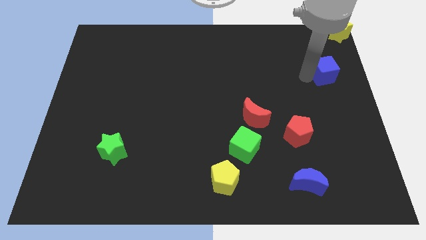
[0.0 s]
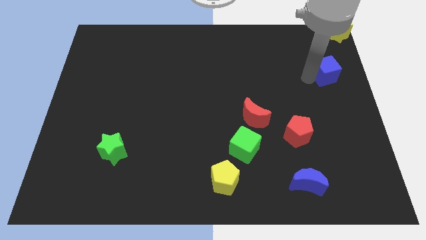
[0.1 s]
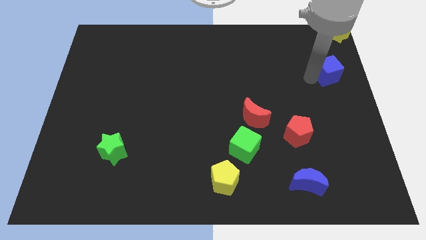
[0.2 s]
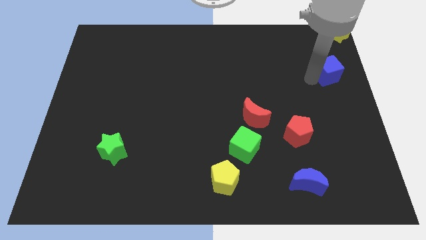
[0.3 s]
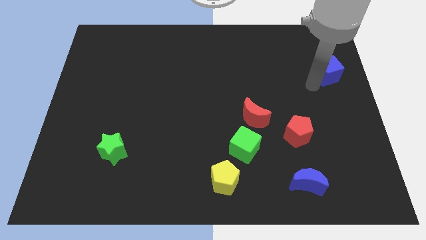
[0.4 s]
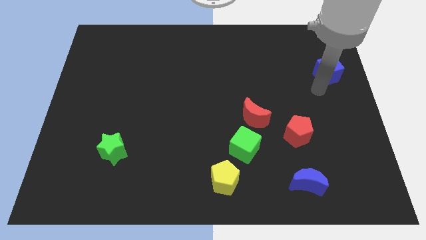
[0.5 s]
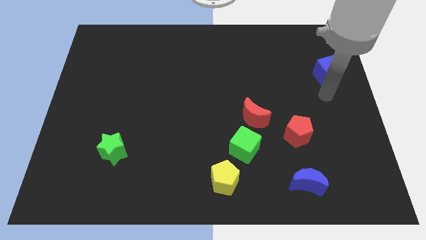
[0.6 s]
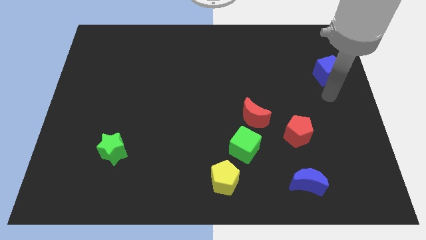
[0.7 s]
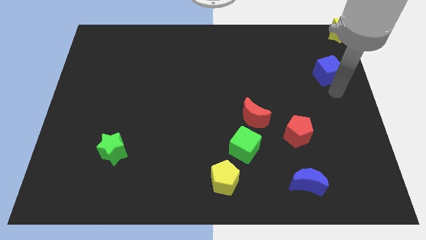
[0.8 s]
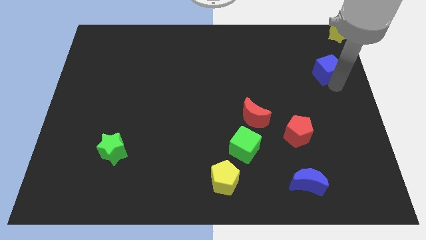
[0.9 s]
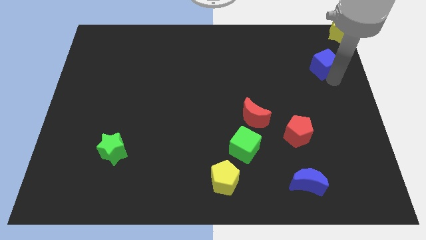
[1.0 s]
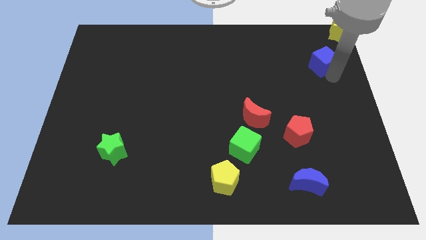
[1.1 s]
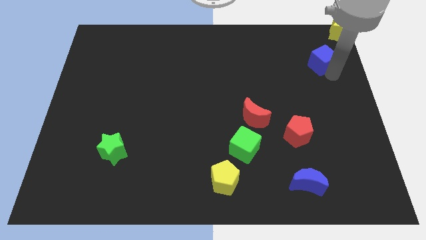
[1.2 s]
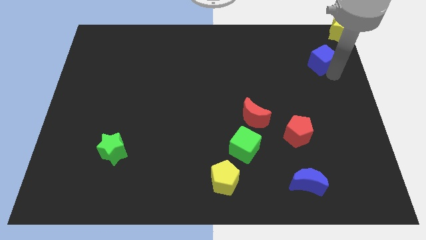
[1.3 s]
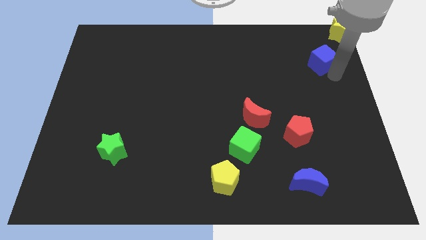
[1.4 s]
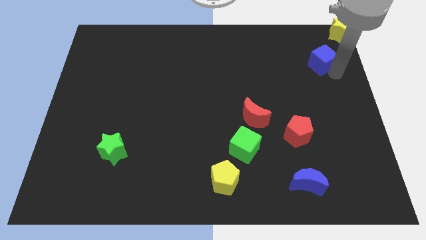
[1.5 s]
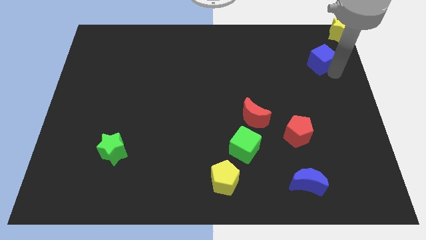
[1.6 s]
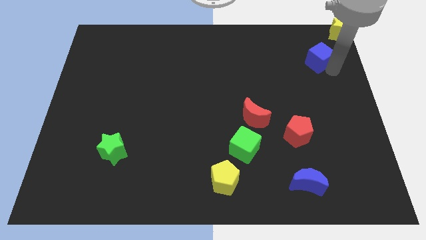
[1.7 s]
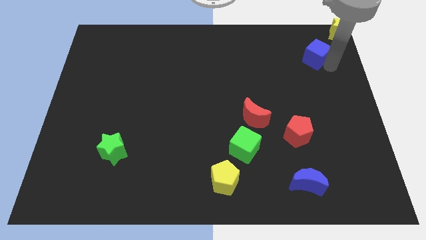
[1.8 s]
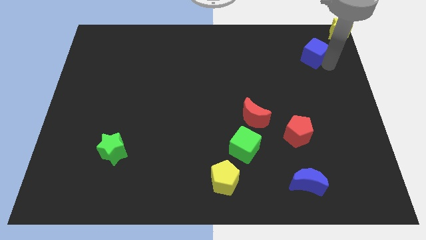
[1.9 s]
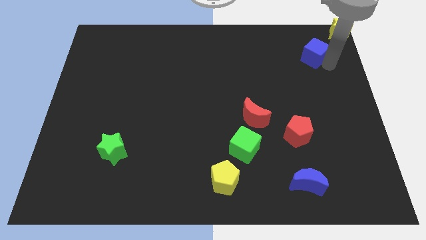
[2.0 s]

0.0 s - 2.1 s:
place blue cube near yellow star

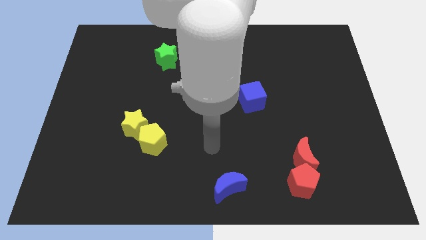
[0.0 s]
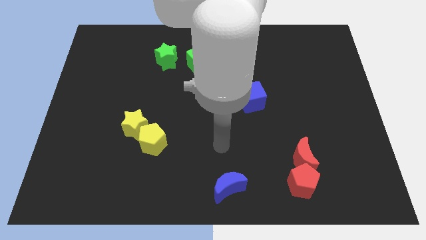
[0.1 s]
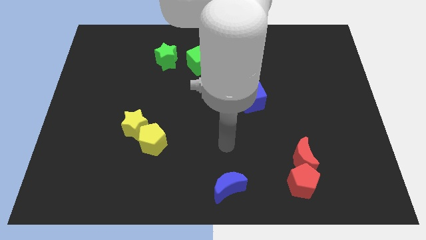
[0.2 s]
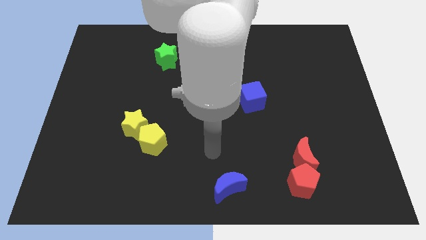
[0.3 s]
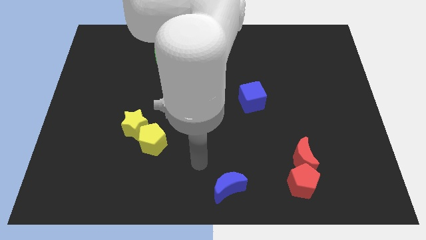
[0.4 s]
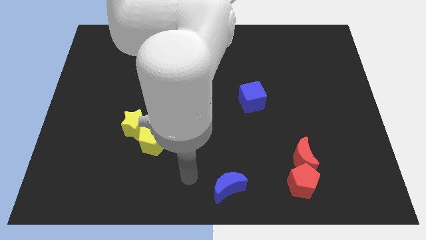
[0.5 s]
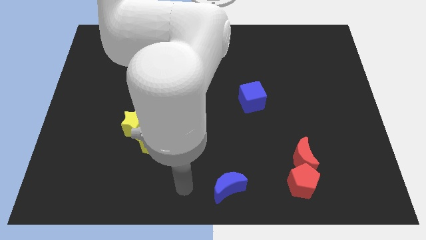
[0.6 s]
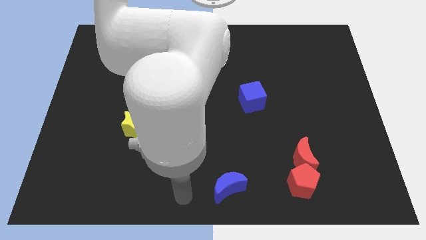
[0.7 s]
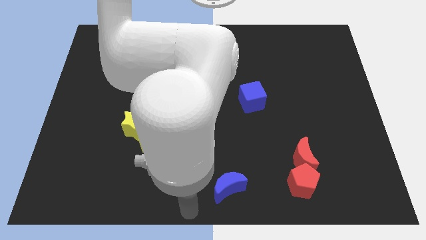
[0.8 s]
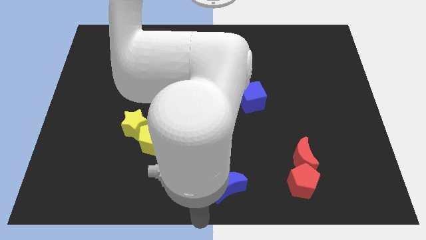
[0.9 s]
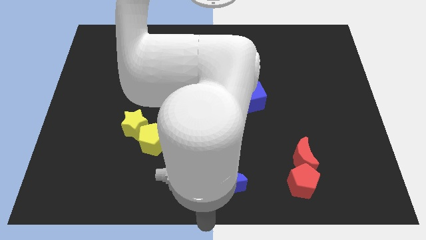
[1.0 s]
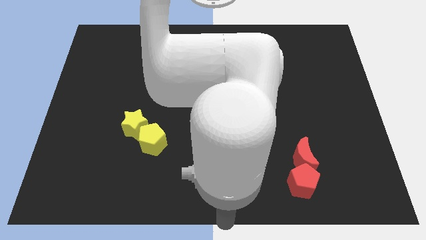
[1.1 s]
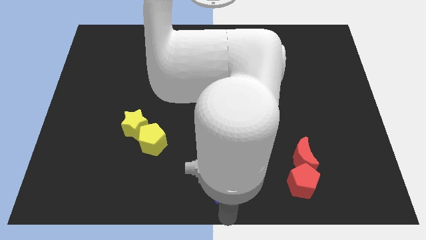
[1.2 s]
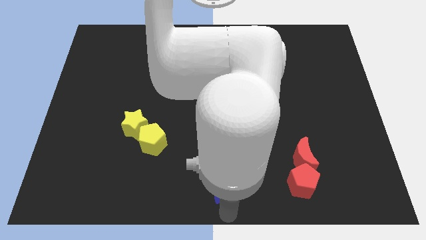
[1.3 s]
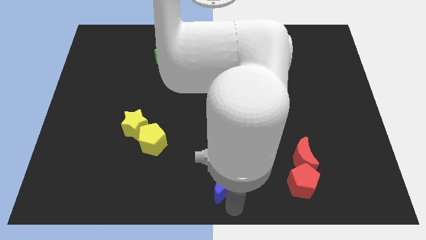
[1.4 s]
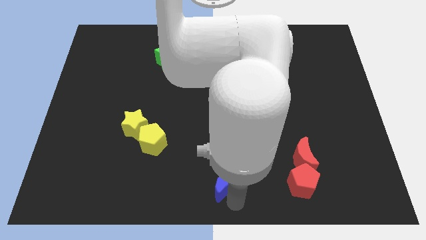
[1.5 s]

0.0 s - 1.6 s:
touch at the bottom side of the blue crescent

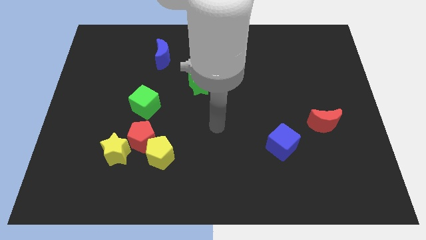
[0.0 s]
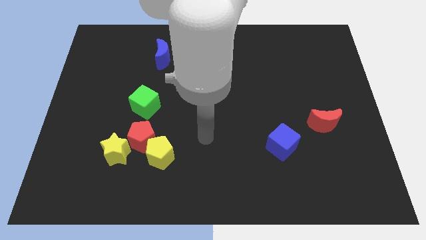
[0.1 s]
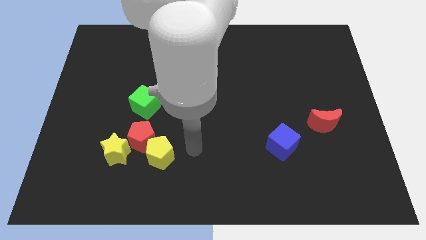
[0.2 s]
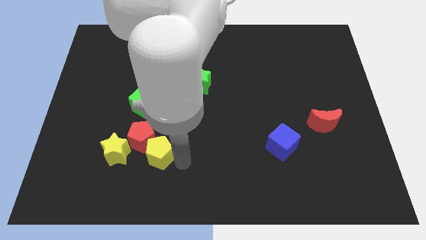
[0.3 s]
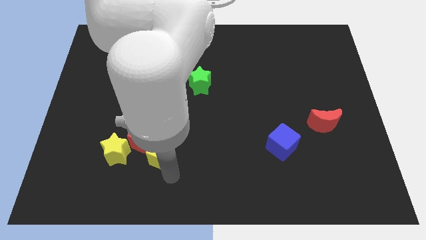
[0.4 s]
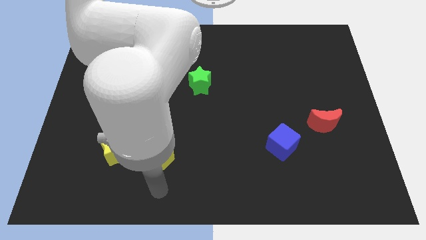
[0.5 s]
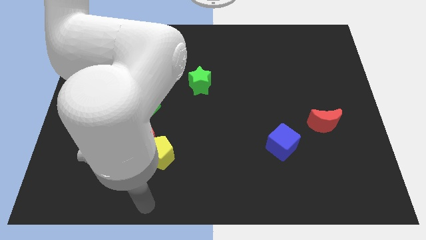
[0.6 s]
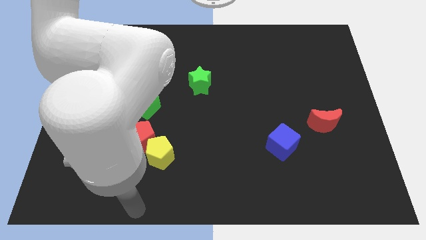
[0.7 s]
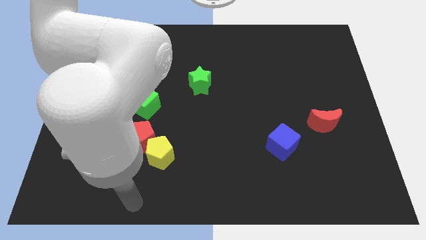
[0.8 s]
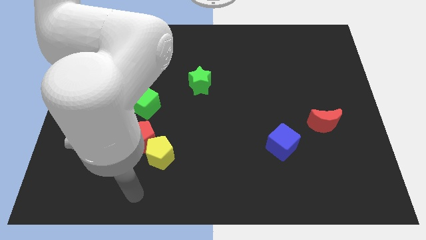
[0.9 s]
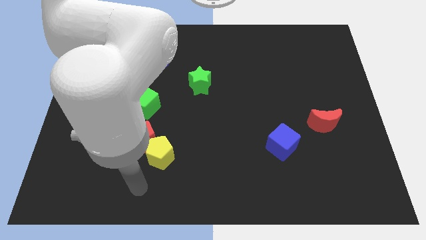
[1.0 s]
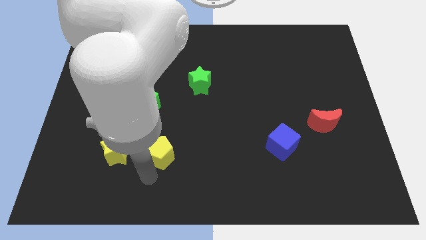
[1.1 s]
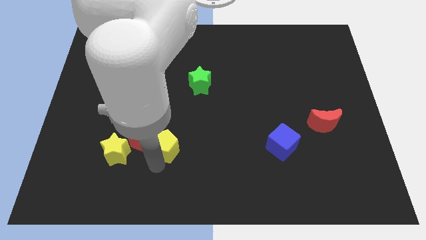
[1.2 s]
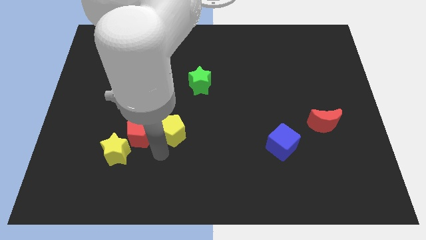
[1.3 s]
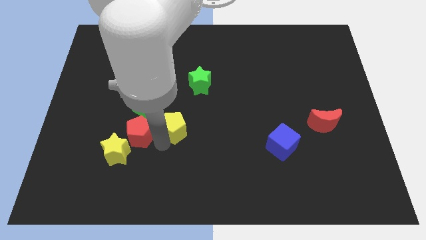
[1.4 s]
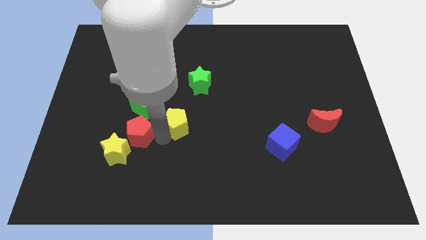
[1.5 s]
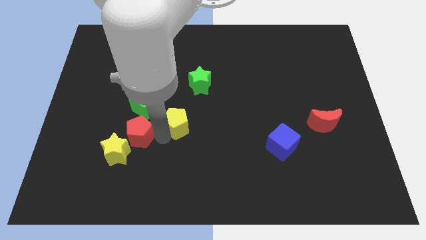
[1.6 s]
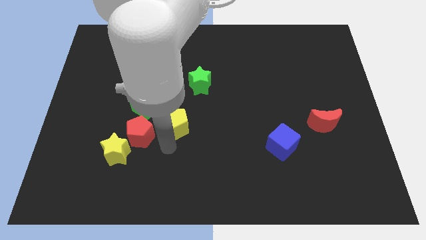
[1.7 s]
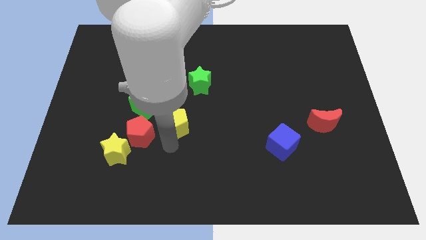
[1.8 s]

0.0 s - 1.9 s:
push the yellow star towards the top side

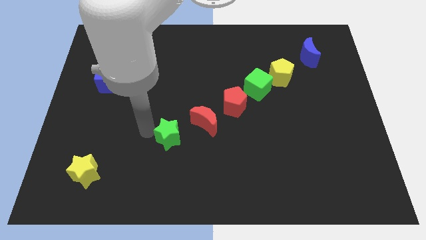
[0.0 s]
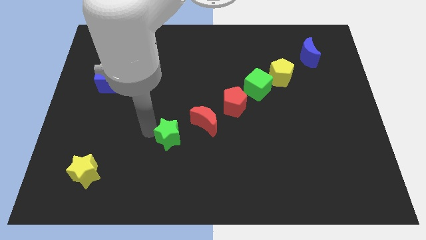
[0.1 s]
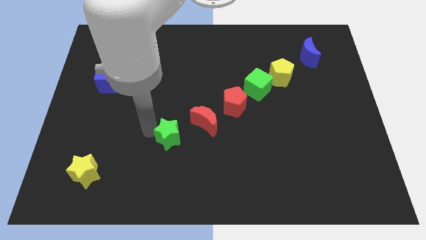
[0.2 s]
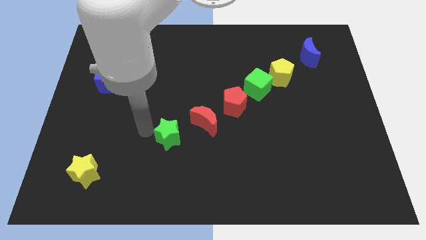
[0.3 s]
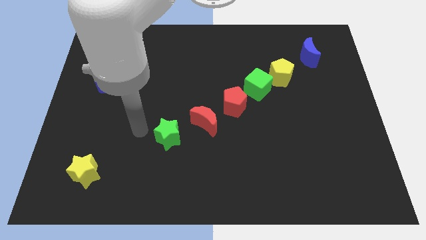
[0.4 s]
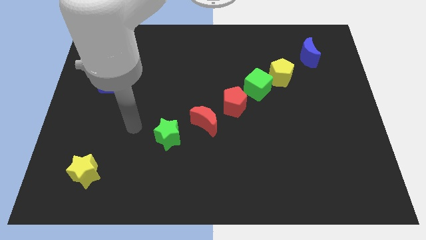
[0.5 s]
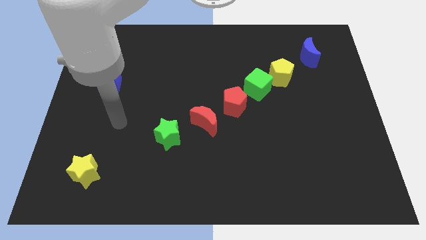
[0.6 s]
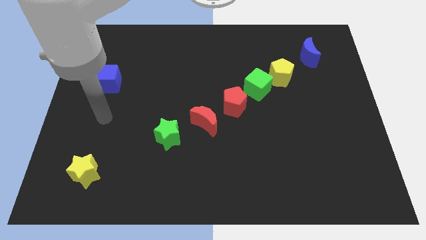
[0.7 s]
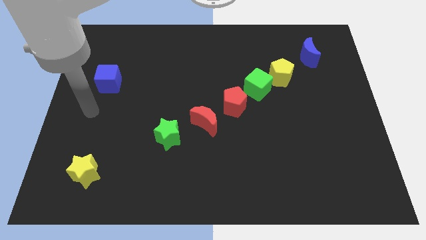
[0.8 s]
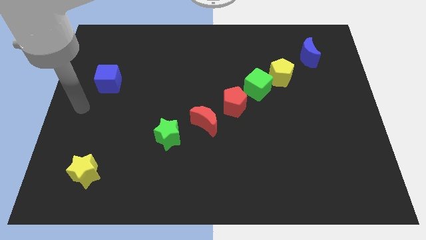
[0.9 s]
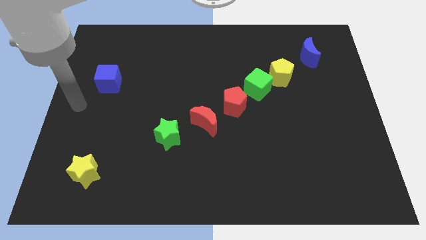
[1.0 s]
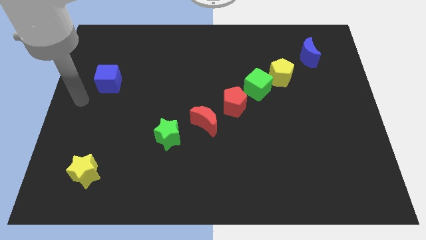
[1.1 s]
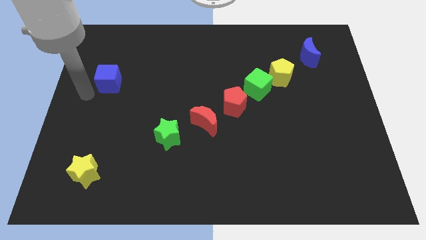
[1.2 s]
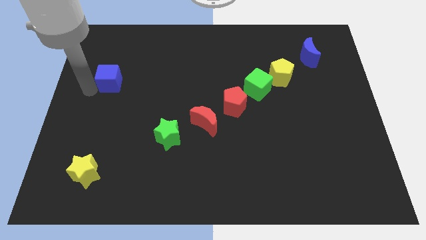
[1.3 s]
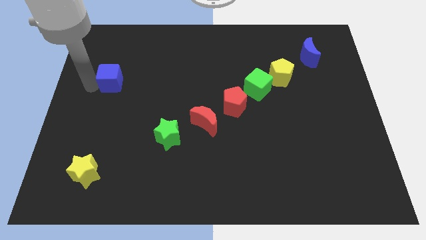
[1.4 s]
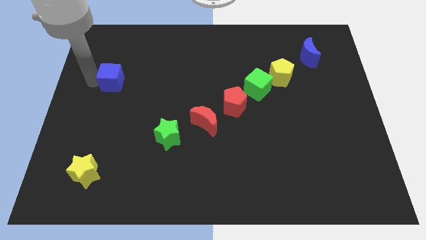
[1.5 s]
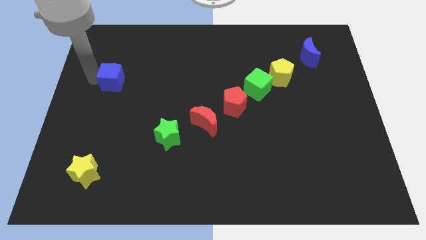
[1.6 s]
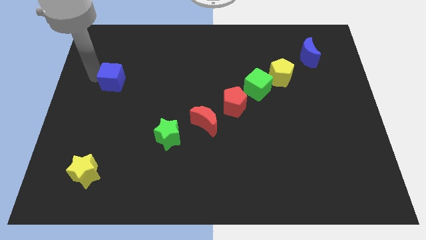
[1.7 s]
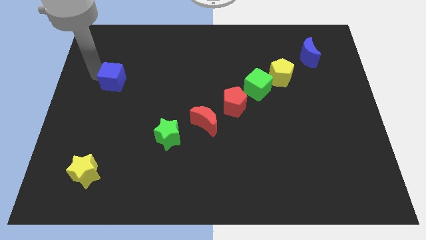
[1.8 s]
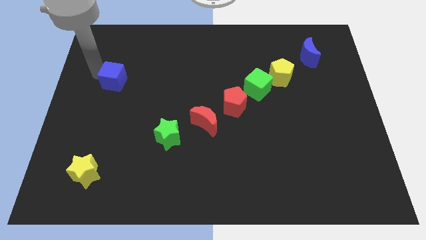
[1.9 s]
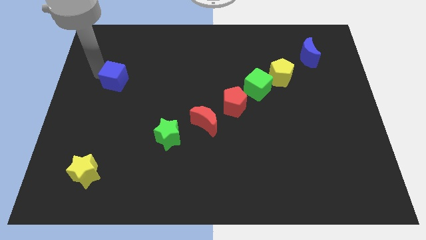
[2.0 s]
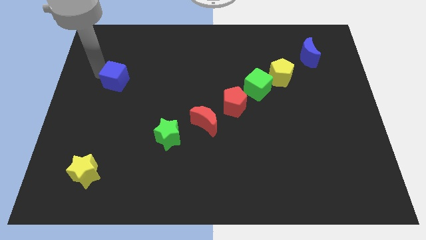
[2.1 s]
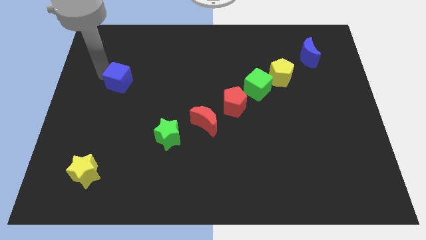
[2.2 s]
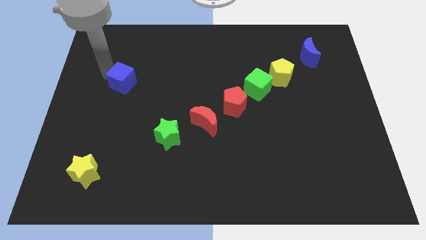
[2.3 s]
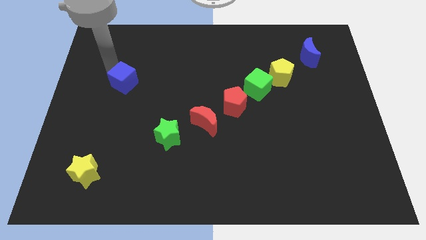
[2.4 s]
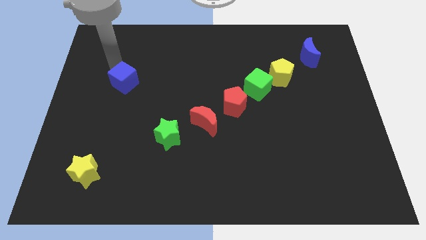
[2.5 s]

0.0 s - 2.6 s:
move your arm close to the blue cube

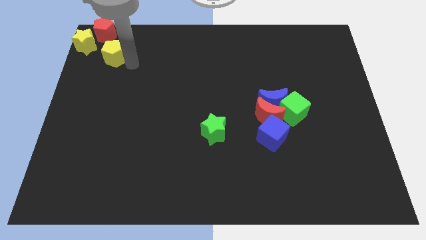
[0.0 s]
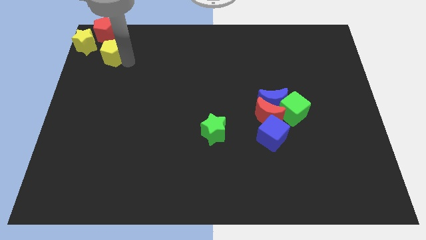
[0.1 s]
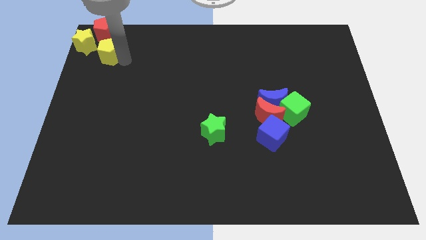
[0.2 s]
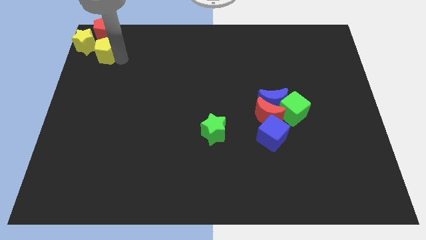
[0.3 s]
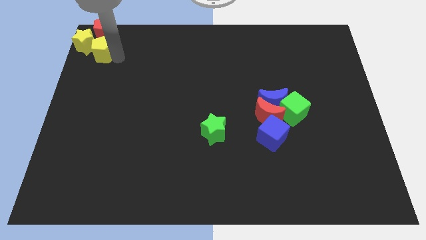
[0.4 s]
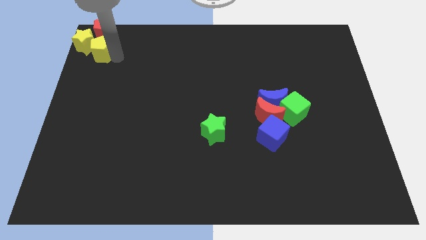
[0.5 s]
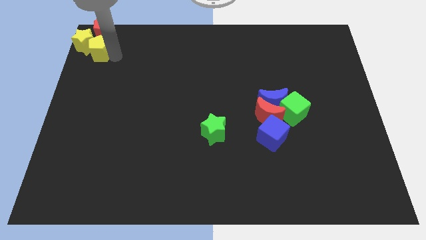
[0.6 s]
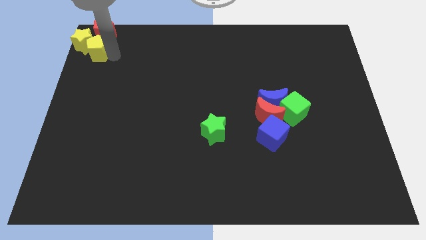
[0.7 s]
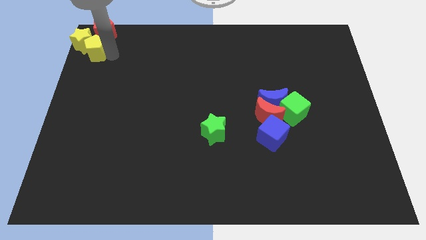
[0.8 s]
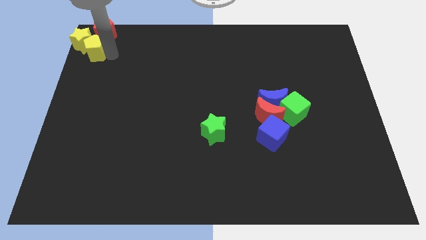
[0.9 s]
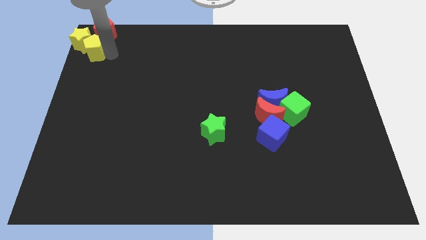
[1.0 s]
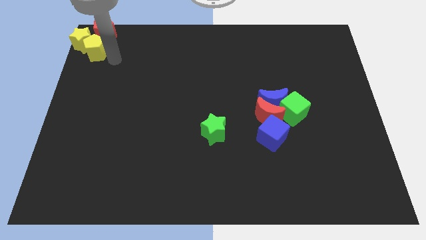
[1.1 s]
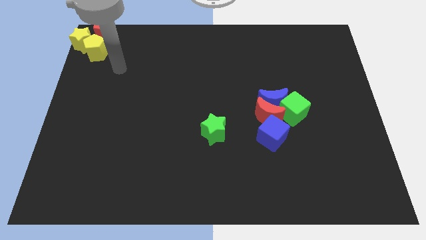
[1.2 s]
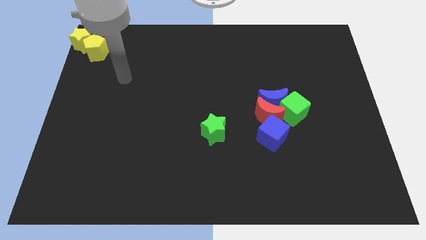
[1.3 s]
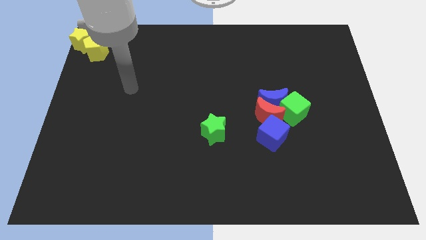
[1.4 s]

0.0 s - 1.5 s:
push yellow pentagon into yellow star
